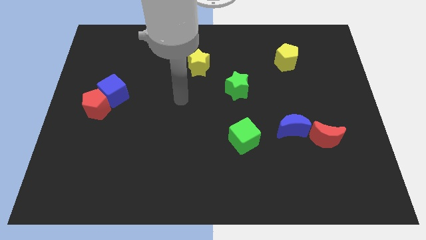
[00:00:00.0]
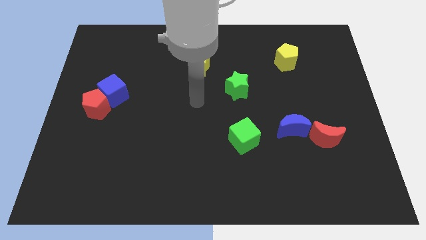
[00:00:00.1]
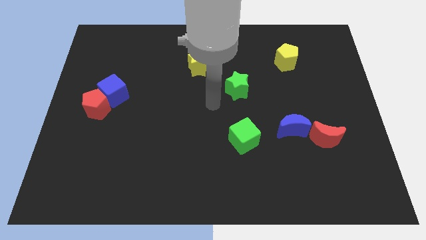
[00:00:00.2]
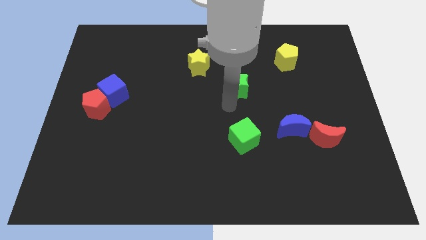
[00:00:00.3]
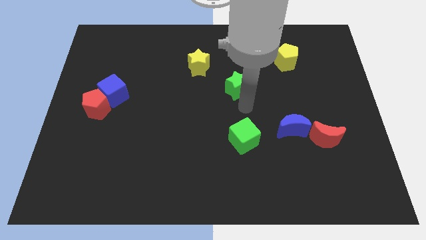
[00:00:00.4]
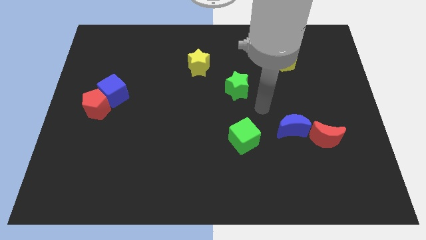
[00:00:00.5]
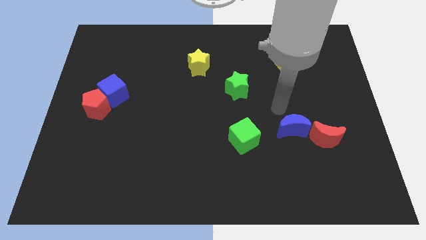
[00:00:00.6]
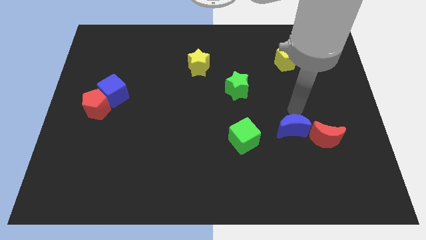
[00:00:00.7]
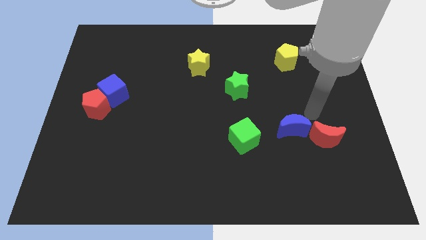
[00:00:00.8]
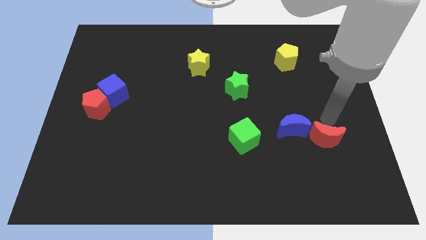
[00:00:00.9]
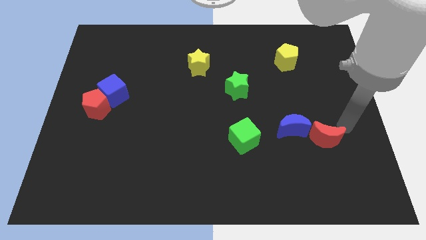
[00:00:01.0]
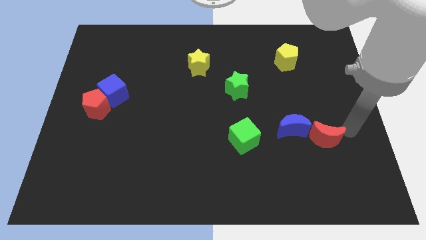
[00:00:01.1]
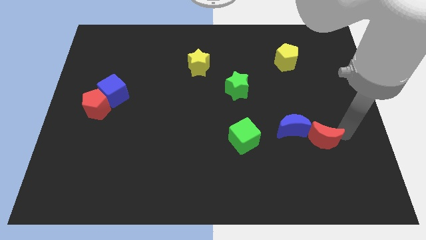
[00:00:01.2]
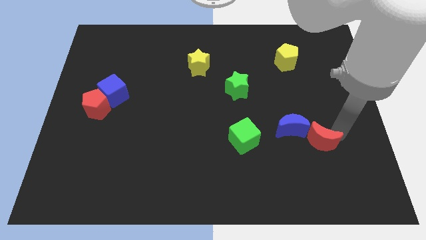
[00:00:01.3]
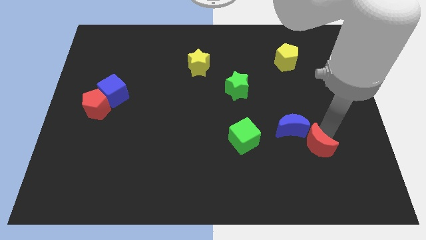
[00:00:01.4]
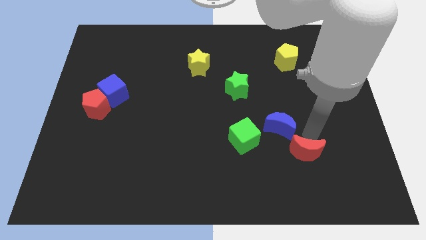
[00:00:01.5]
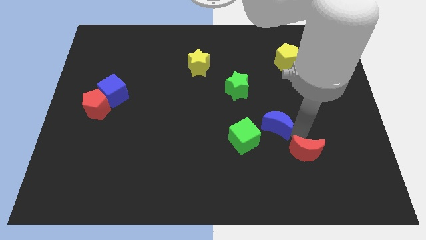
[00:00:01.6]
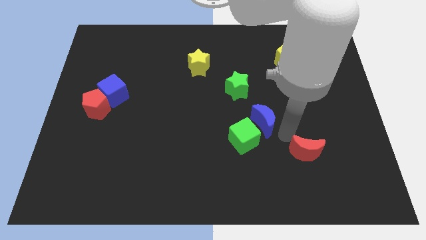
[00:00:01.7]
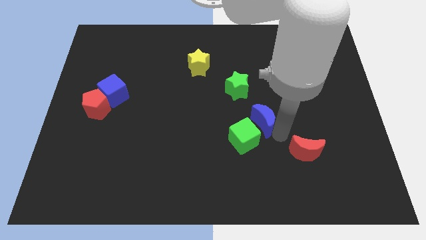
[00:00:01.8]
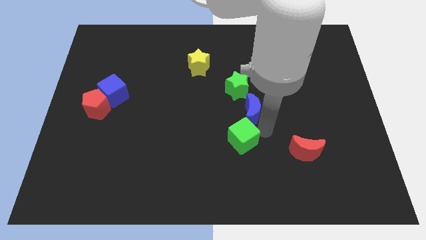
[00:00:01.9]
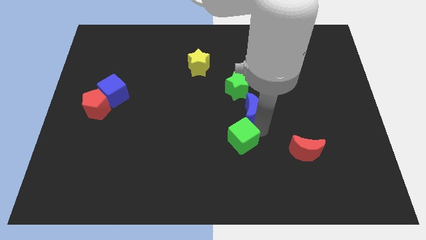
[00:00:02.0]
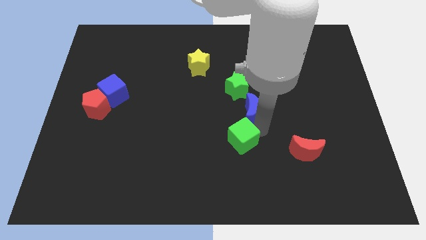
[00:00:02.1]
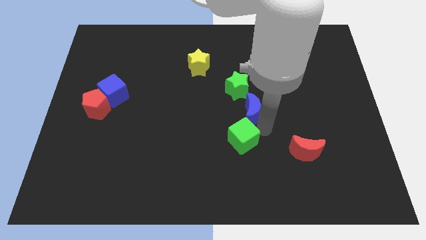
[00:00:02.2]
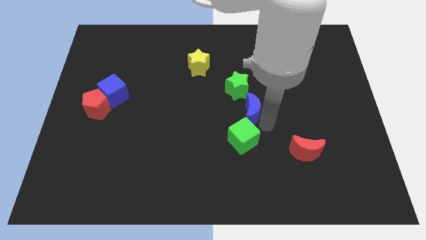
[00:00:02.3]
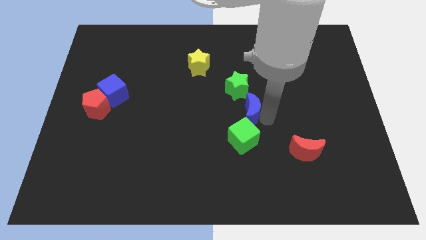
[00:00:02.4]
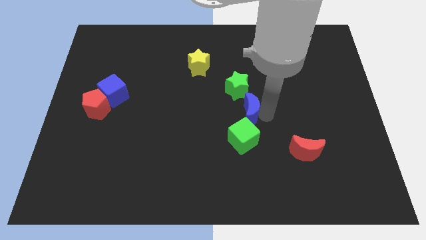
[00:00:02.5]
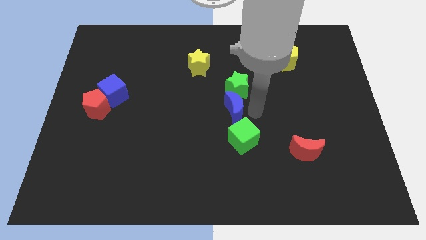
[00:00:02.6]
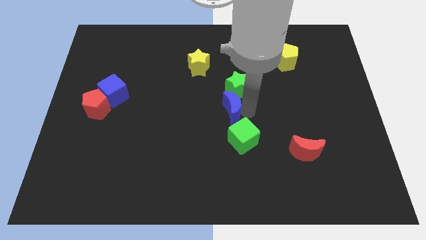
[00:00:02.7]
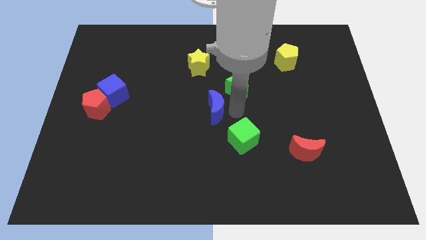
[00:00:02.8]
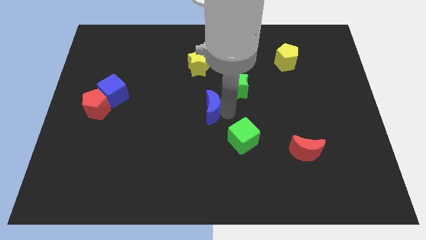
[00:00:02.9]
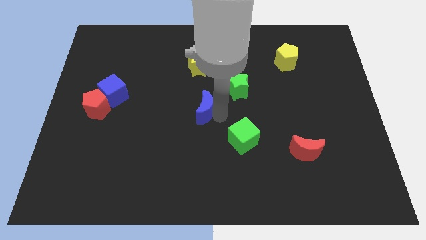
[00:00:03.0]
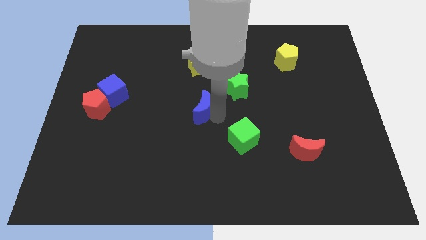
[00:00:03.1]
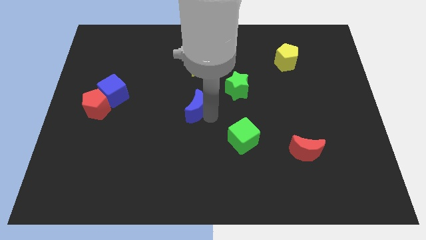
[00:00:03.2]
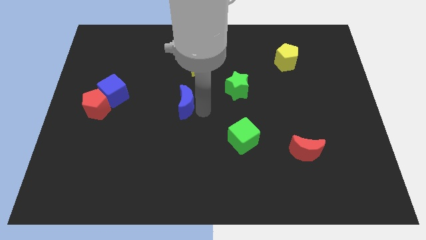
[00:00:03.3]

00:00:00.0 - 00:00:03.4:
move the blue moon to the center of the board

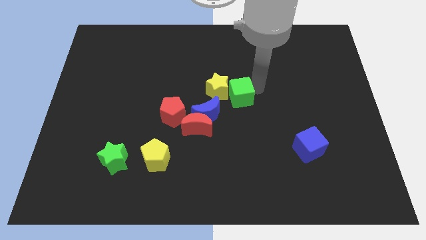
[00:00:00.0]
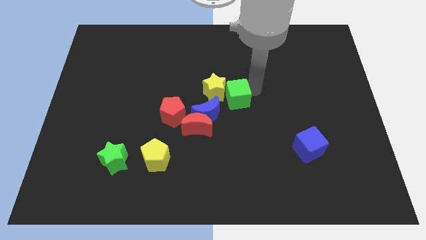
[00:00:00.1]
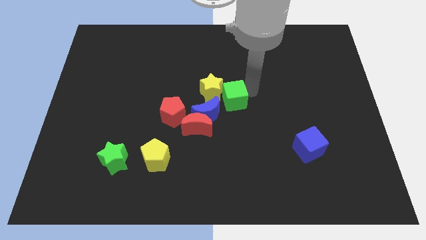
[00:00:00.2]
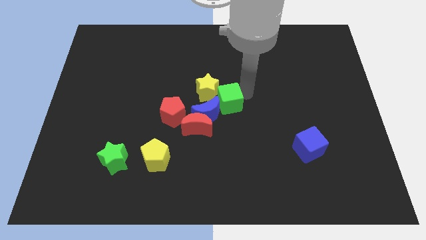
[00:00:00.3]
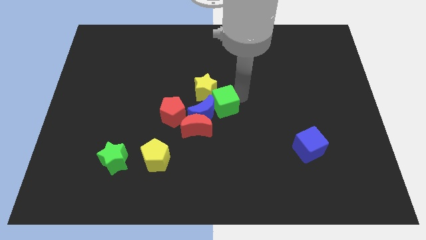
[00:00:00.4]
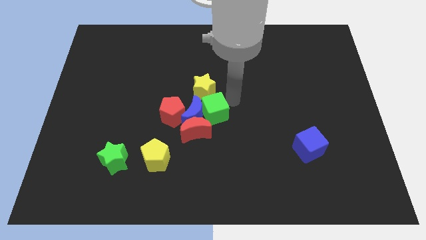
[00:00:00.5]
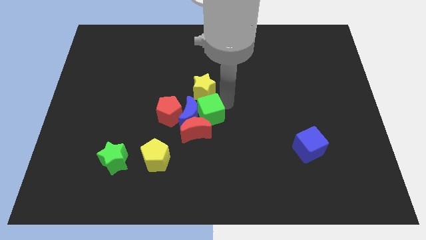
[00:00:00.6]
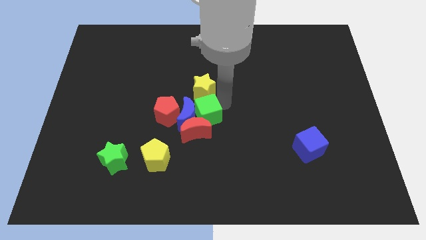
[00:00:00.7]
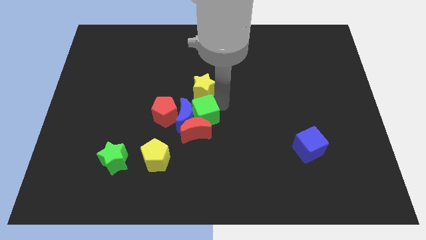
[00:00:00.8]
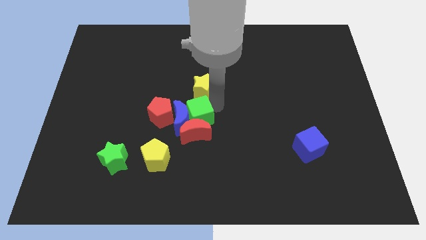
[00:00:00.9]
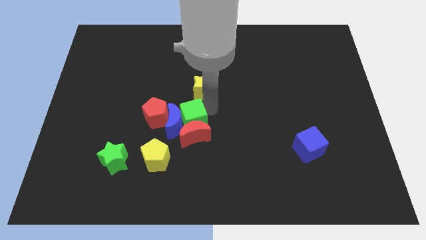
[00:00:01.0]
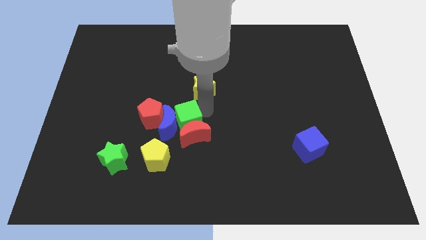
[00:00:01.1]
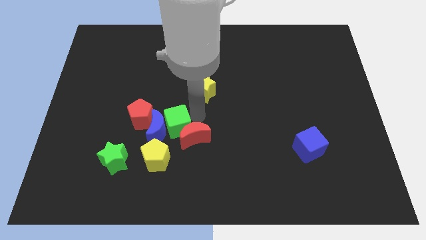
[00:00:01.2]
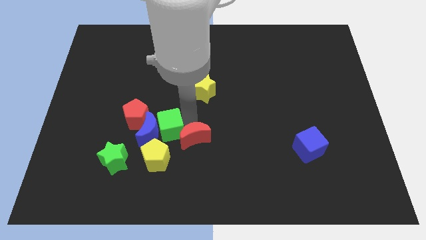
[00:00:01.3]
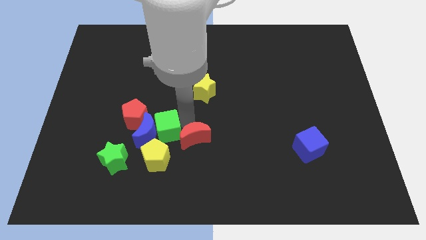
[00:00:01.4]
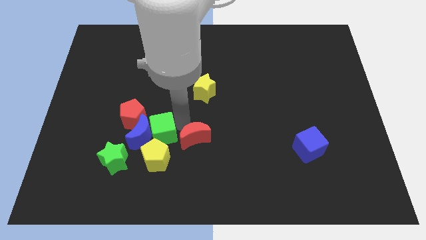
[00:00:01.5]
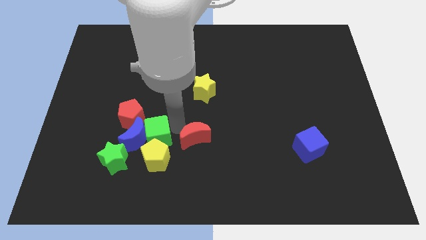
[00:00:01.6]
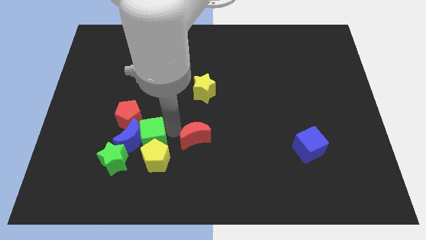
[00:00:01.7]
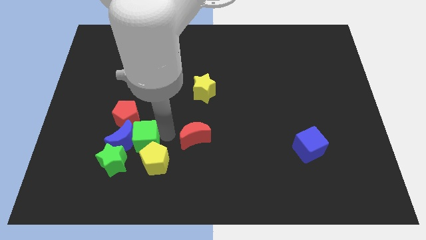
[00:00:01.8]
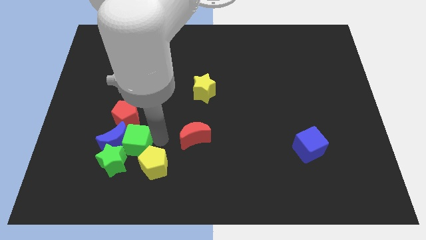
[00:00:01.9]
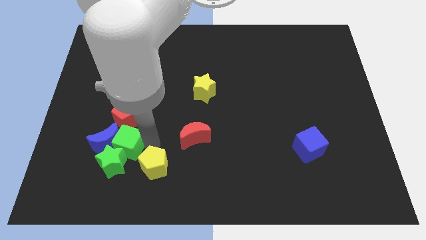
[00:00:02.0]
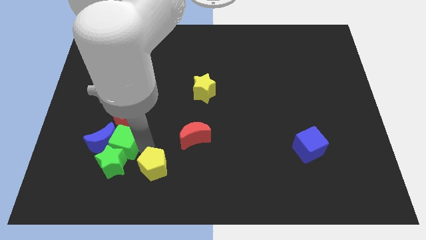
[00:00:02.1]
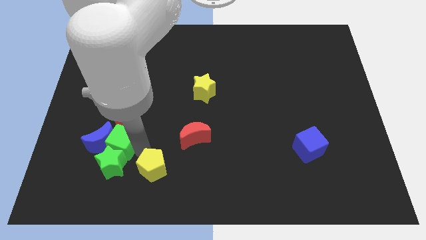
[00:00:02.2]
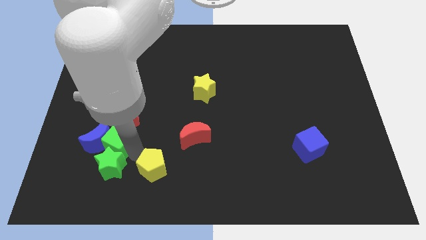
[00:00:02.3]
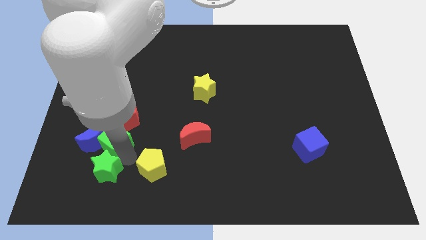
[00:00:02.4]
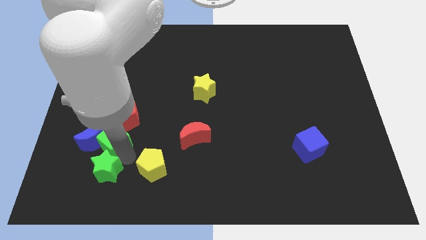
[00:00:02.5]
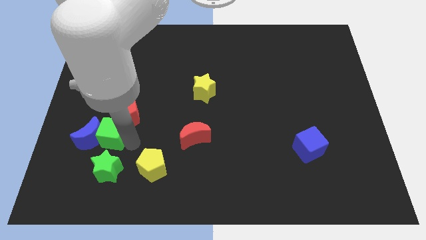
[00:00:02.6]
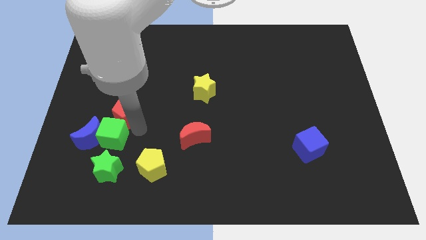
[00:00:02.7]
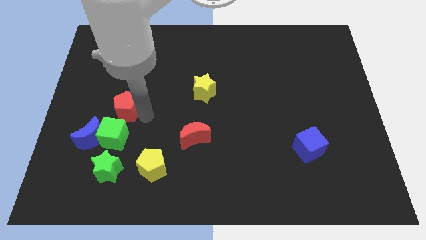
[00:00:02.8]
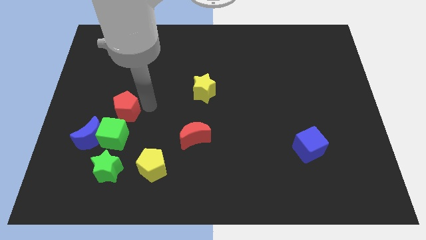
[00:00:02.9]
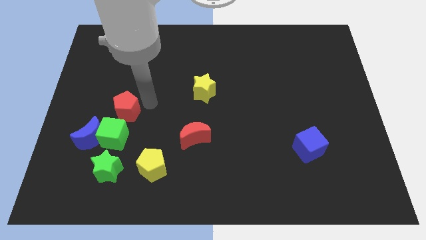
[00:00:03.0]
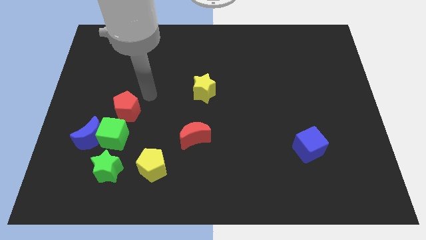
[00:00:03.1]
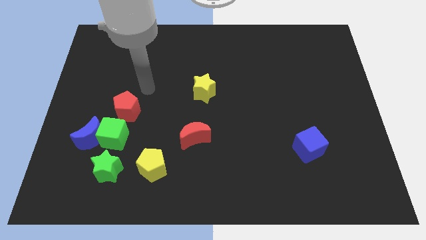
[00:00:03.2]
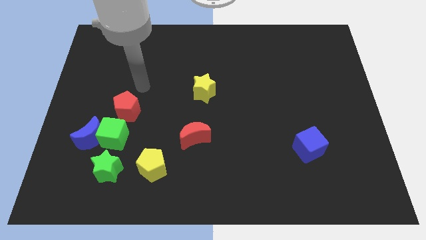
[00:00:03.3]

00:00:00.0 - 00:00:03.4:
push the green cube into the blue moon

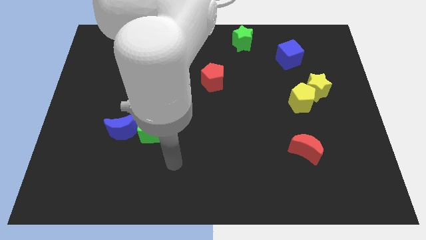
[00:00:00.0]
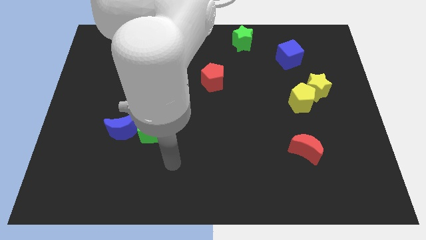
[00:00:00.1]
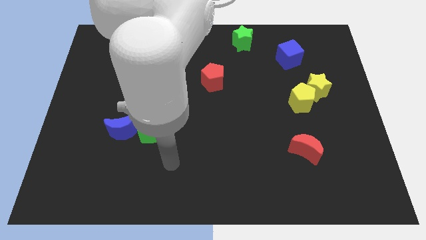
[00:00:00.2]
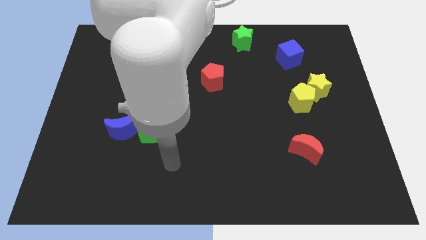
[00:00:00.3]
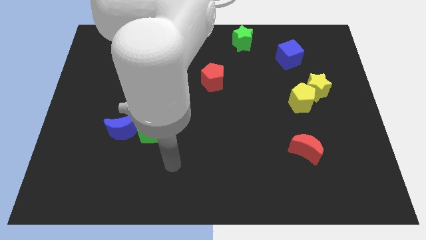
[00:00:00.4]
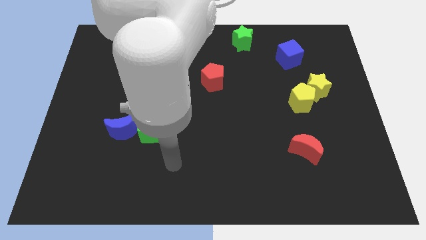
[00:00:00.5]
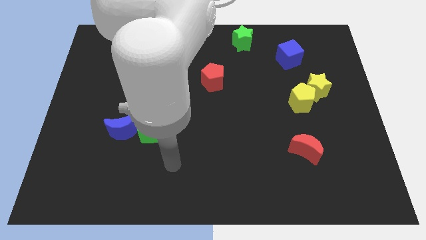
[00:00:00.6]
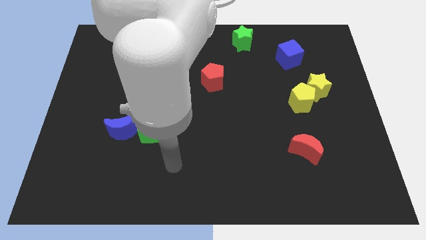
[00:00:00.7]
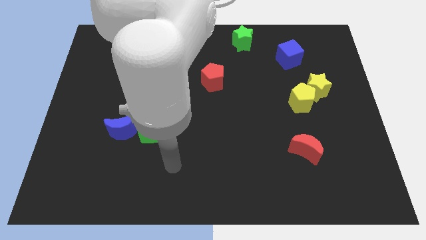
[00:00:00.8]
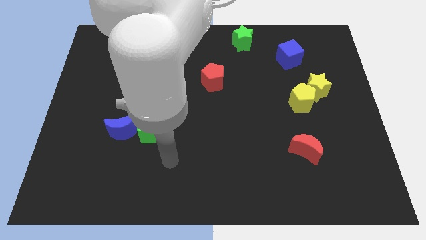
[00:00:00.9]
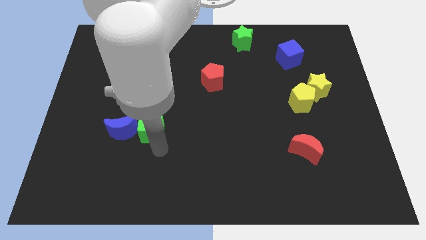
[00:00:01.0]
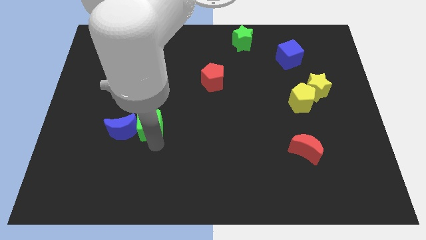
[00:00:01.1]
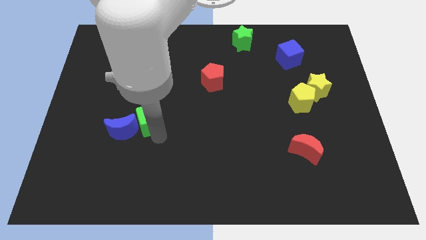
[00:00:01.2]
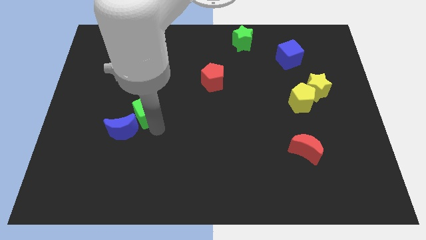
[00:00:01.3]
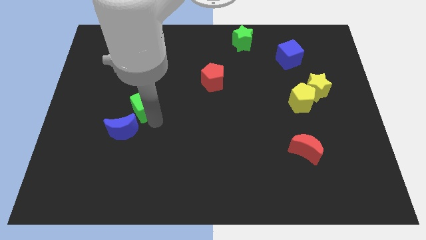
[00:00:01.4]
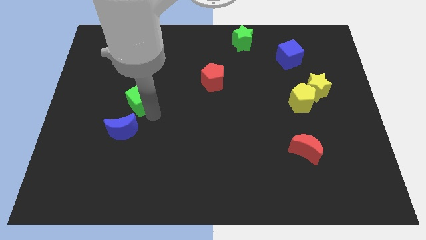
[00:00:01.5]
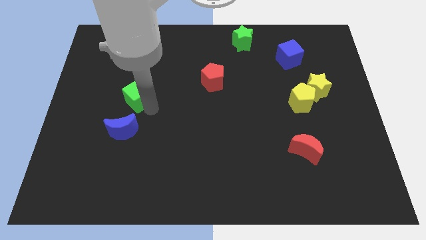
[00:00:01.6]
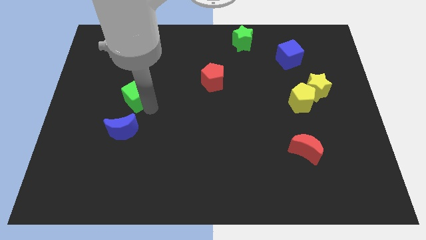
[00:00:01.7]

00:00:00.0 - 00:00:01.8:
push the green cube towards top
